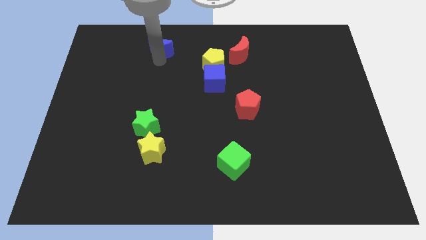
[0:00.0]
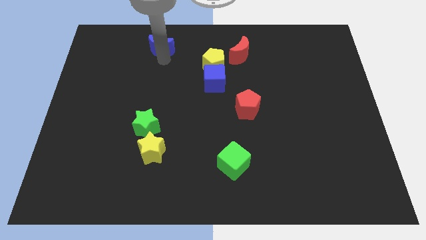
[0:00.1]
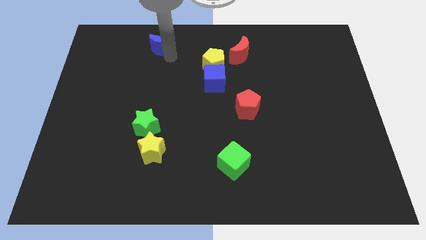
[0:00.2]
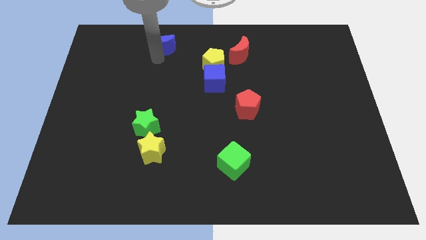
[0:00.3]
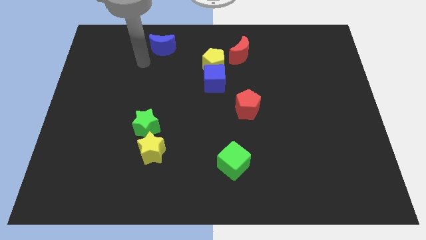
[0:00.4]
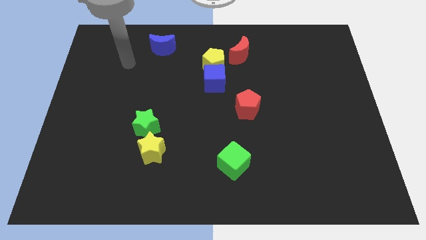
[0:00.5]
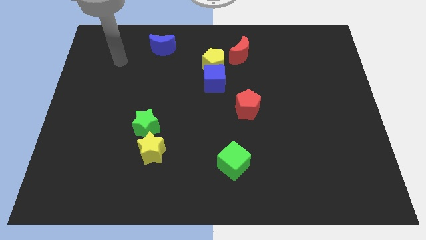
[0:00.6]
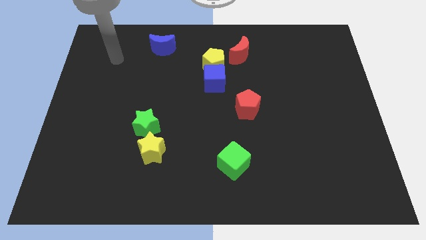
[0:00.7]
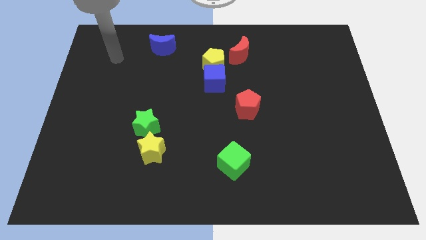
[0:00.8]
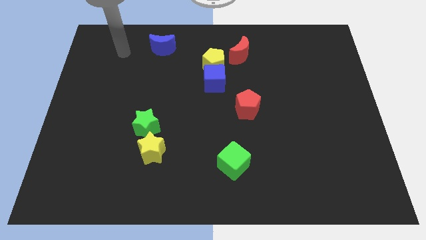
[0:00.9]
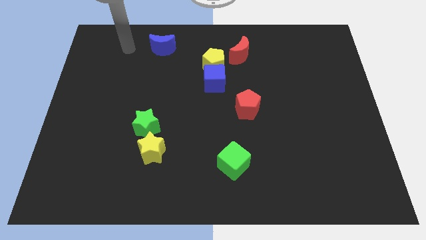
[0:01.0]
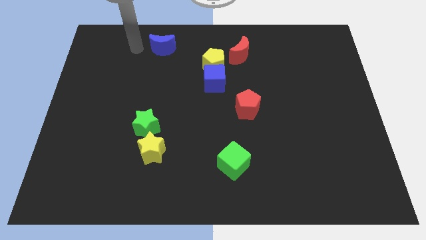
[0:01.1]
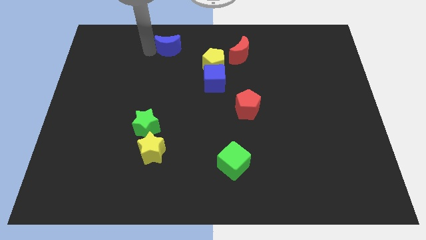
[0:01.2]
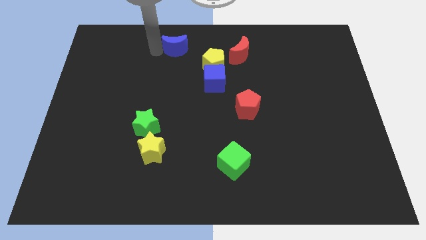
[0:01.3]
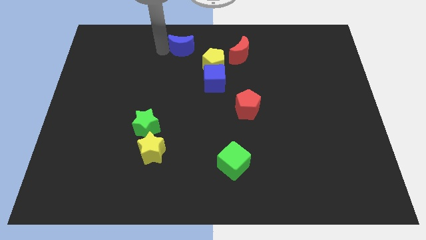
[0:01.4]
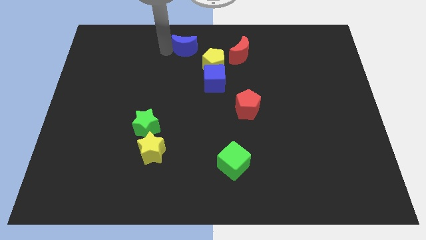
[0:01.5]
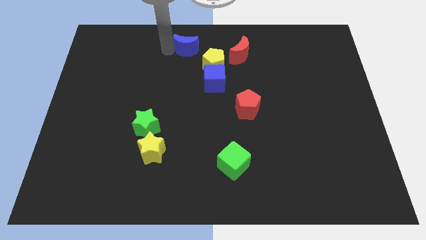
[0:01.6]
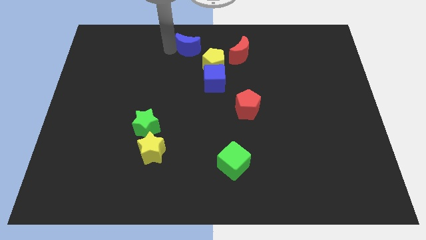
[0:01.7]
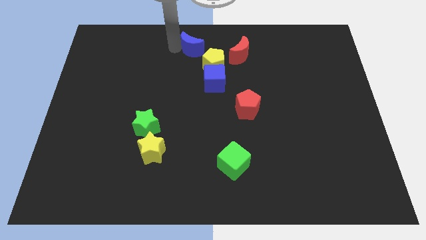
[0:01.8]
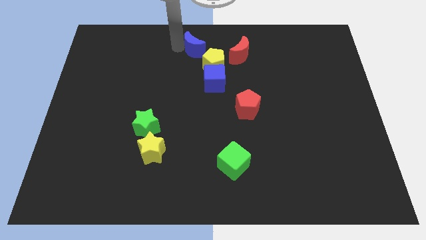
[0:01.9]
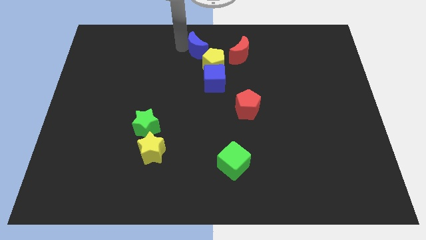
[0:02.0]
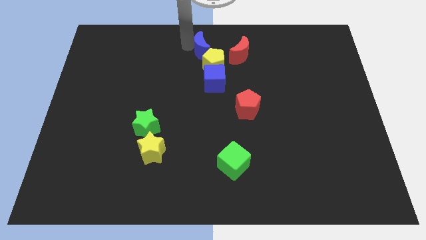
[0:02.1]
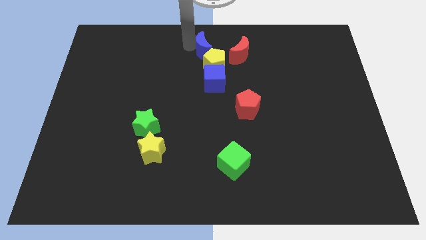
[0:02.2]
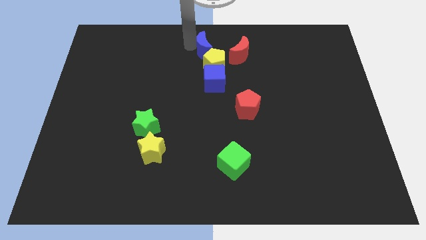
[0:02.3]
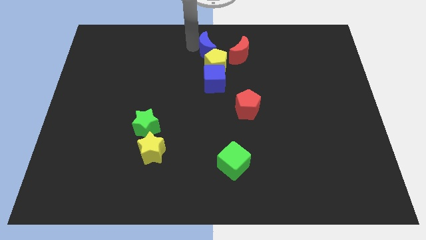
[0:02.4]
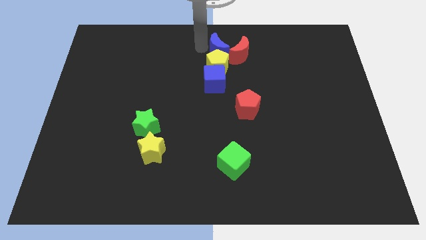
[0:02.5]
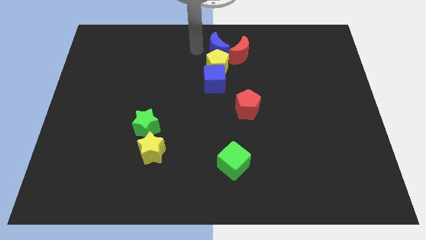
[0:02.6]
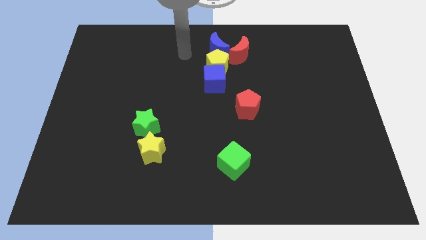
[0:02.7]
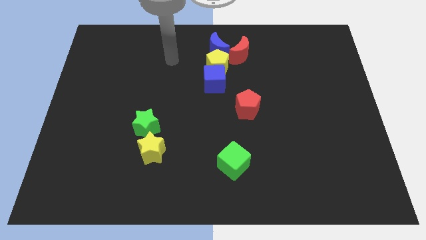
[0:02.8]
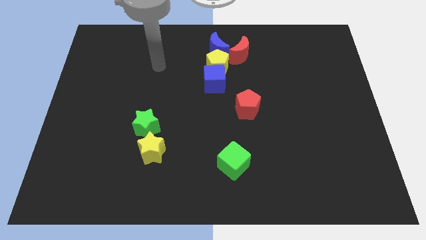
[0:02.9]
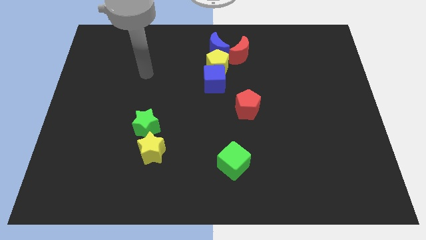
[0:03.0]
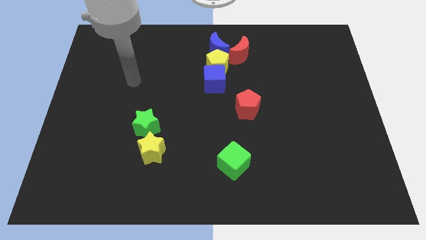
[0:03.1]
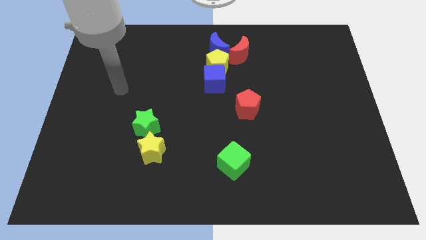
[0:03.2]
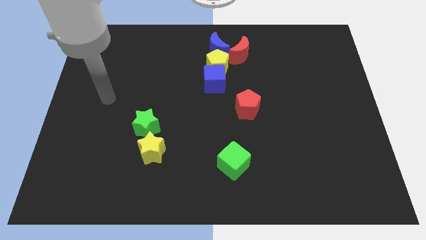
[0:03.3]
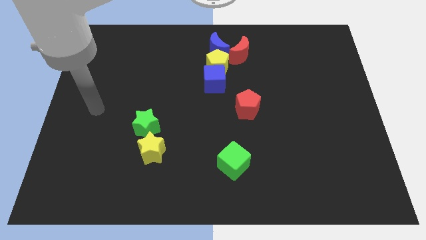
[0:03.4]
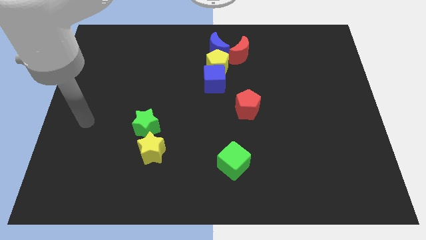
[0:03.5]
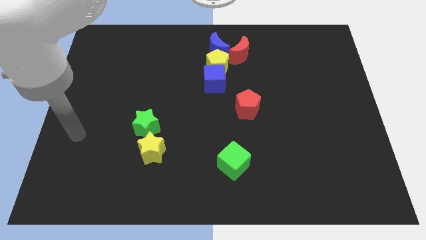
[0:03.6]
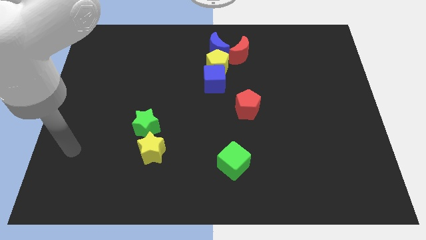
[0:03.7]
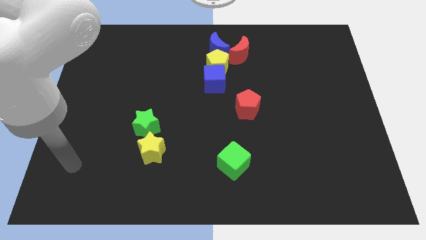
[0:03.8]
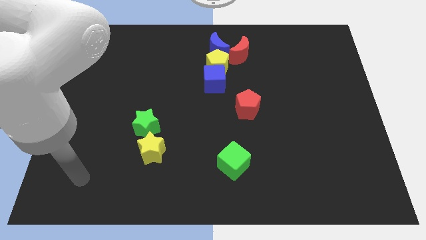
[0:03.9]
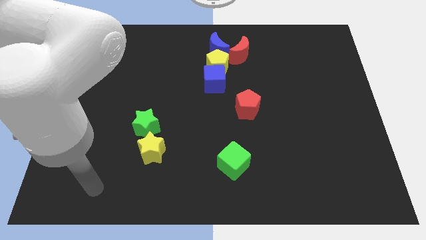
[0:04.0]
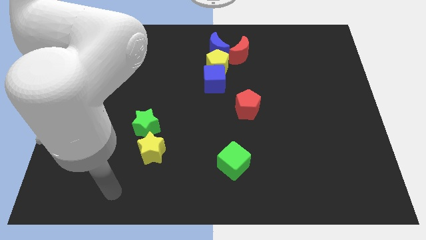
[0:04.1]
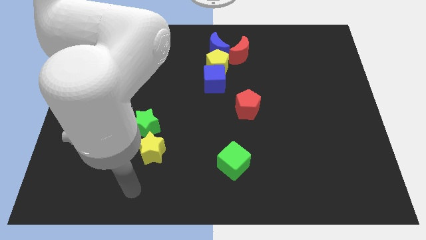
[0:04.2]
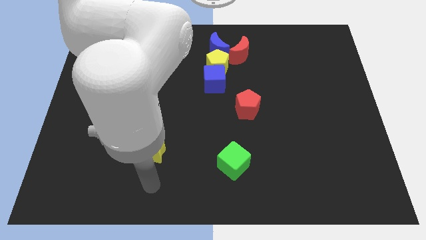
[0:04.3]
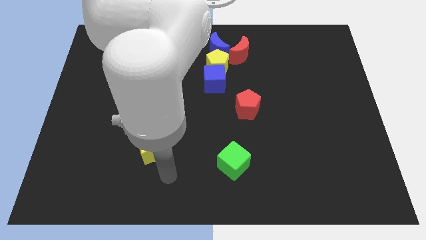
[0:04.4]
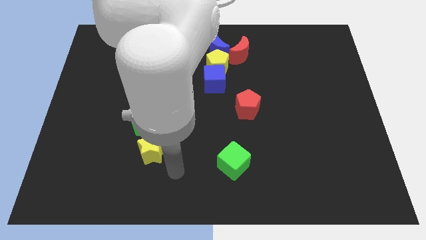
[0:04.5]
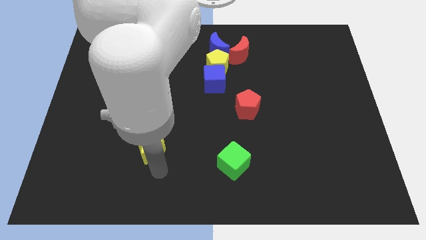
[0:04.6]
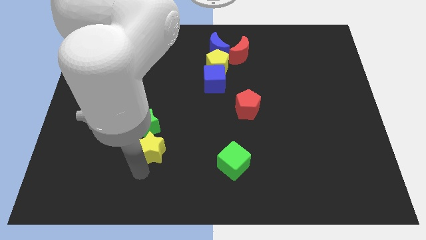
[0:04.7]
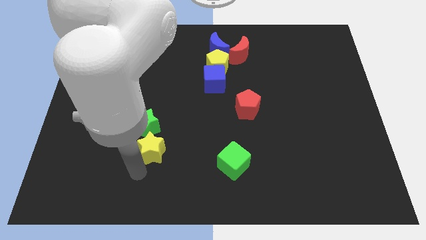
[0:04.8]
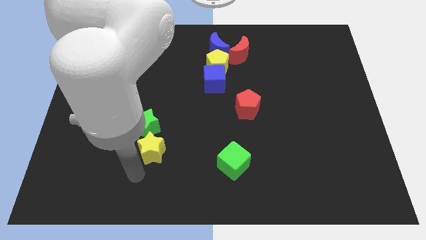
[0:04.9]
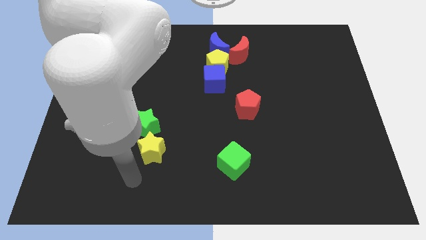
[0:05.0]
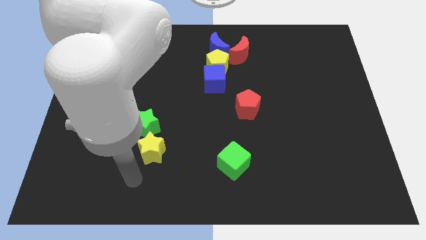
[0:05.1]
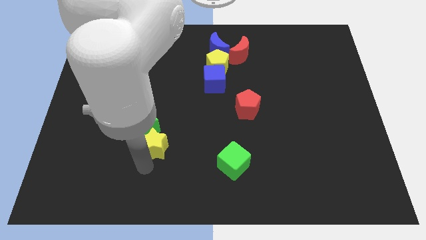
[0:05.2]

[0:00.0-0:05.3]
move the blue crescent on the top of yellow pentagon

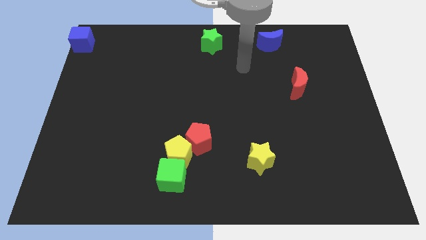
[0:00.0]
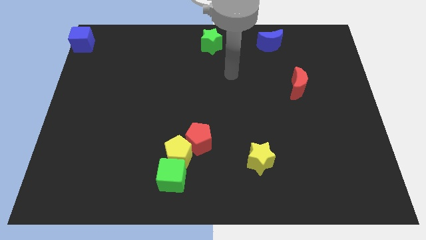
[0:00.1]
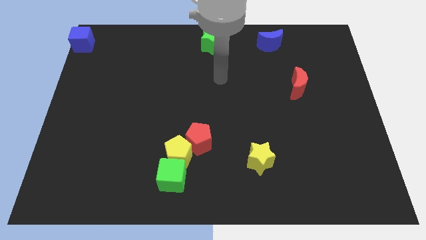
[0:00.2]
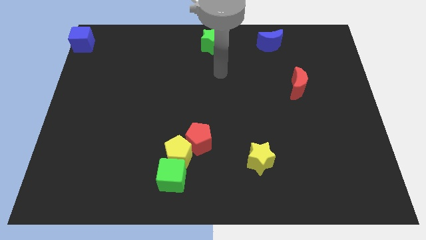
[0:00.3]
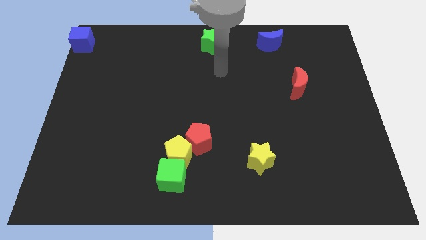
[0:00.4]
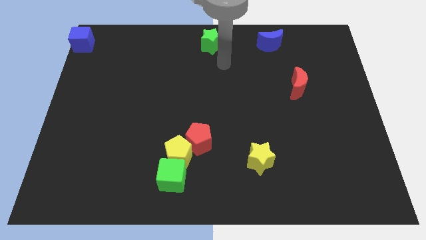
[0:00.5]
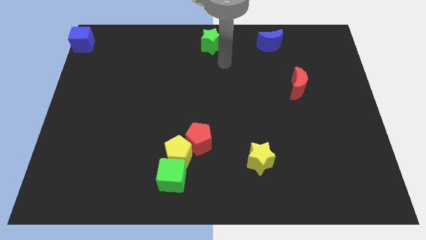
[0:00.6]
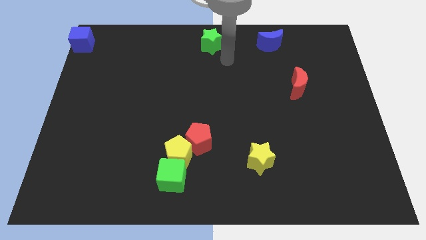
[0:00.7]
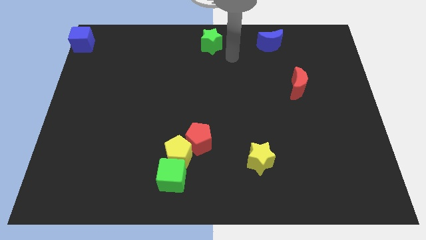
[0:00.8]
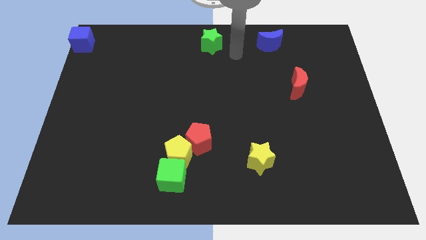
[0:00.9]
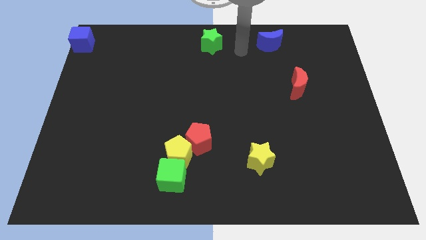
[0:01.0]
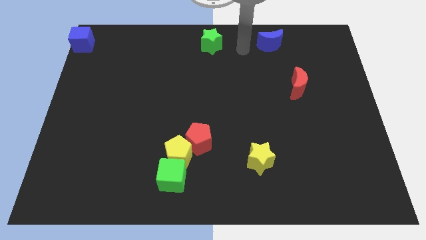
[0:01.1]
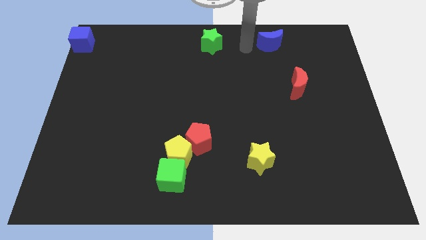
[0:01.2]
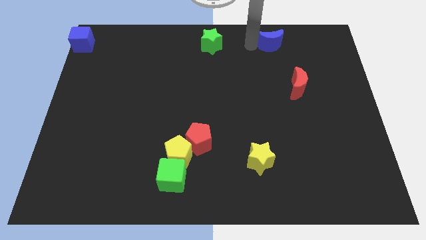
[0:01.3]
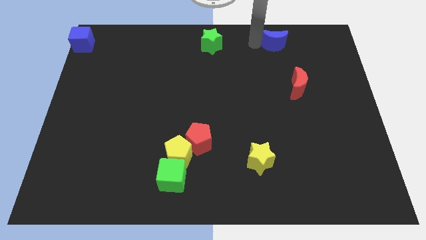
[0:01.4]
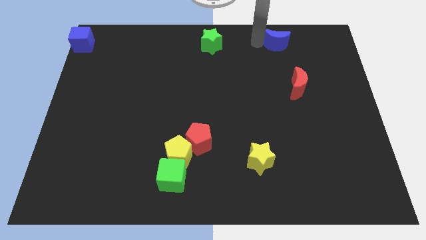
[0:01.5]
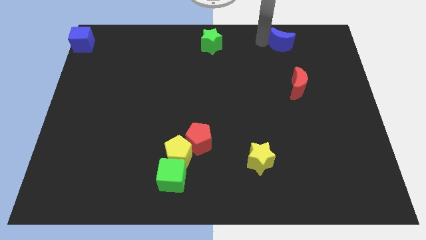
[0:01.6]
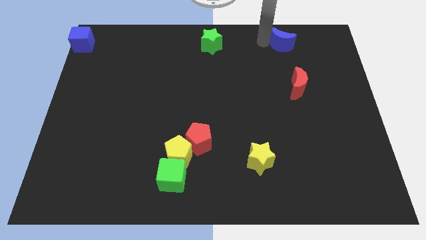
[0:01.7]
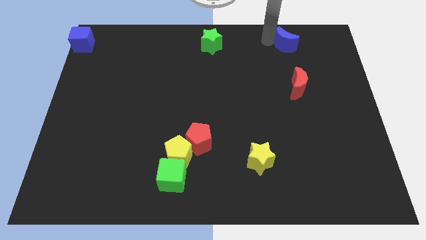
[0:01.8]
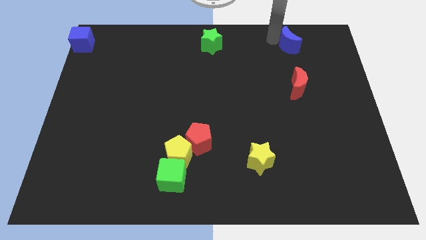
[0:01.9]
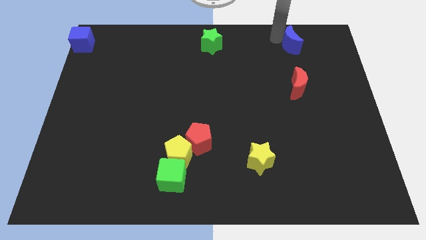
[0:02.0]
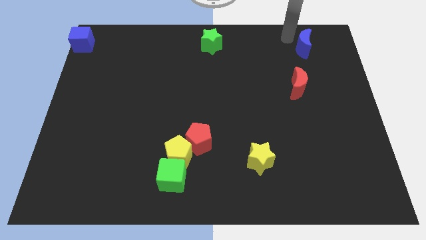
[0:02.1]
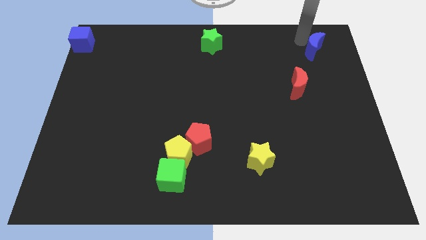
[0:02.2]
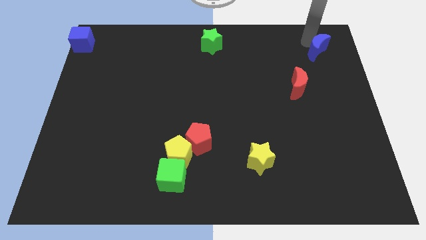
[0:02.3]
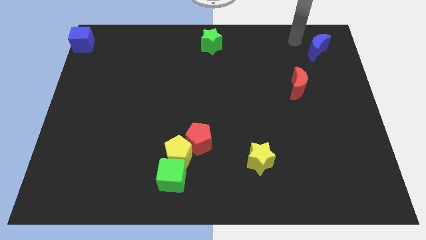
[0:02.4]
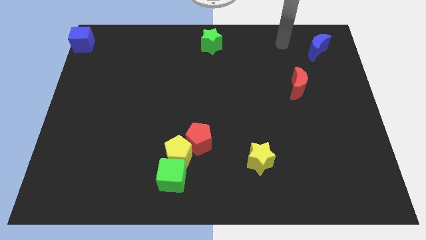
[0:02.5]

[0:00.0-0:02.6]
push the blue semi circle to the top right of the red crescent

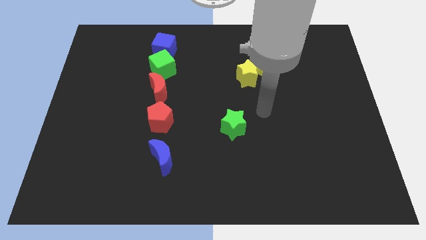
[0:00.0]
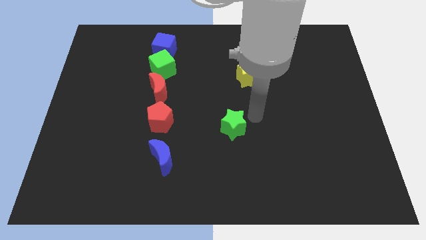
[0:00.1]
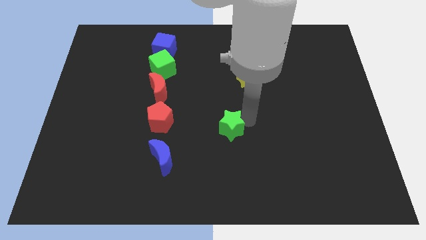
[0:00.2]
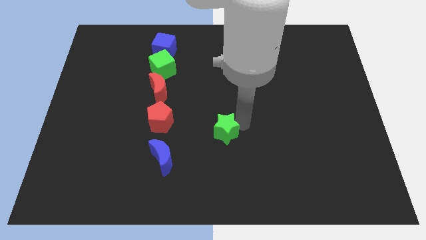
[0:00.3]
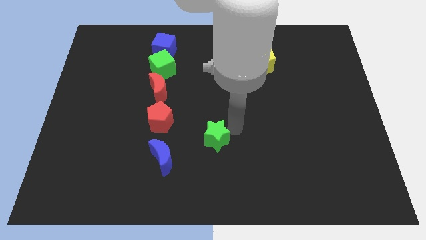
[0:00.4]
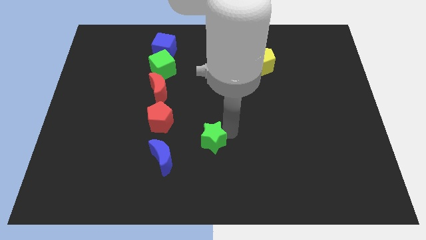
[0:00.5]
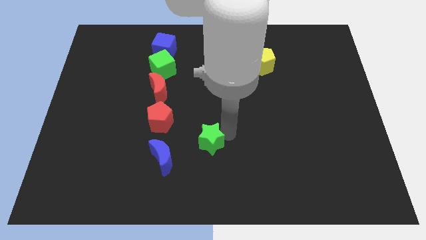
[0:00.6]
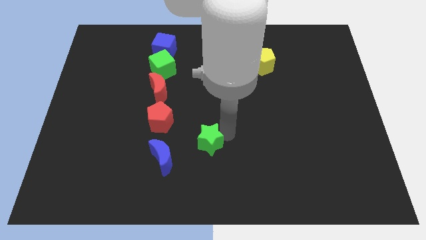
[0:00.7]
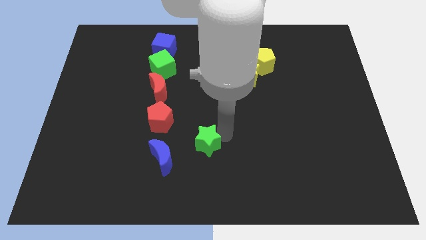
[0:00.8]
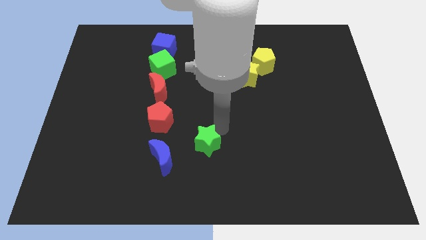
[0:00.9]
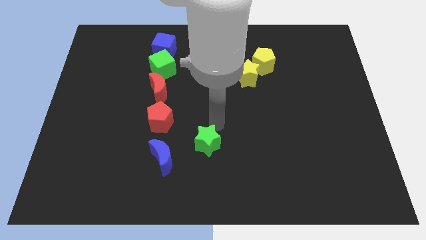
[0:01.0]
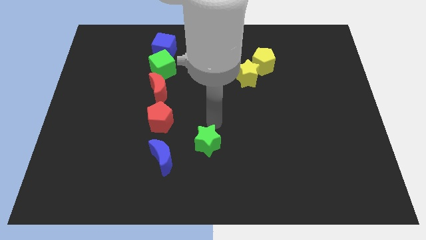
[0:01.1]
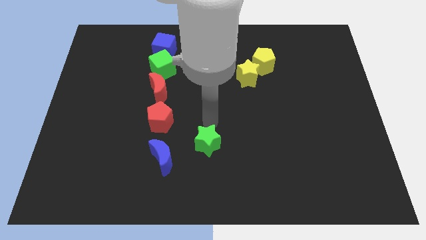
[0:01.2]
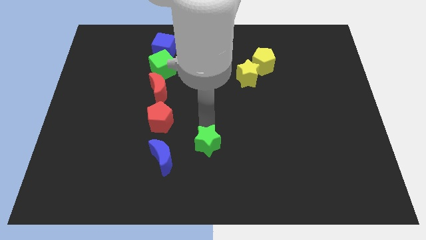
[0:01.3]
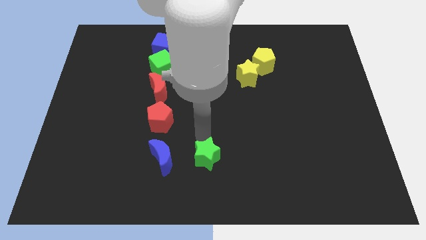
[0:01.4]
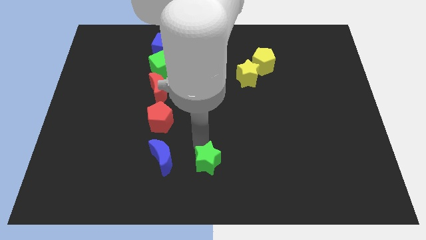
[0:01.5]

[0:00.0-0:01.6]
move the green star to the right of the blue crescent
